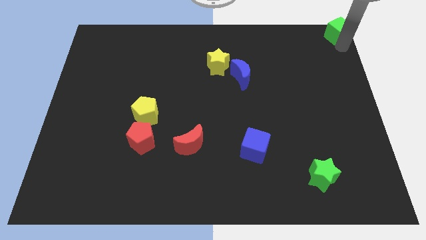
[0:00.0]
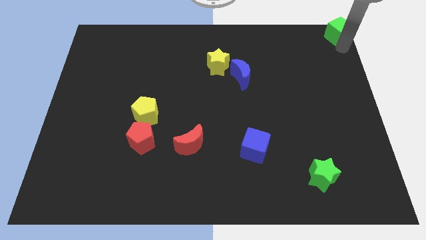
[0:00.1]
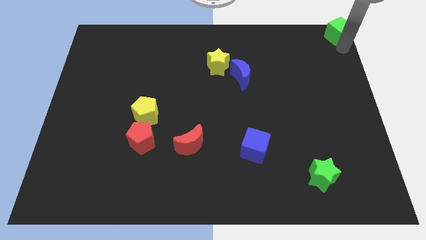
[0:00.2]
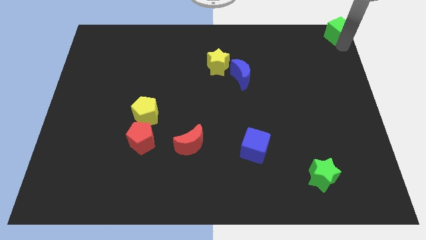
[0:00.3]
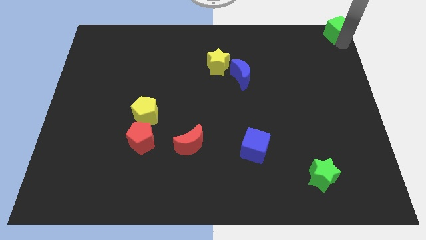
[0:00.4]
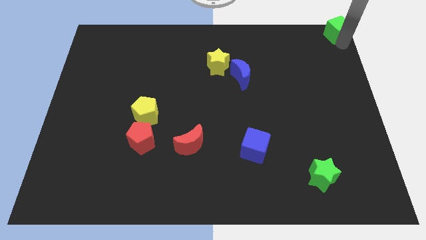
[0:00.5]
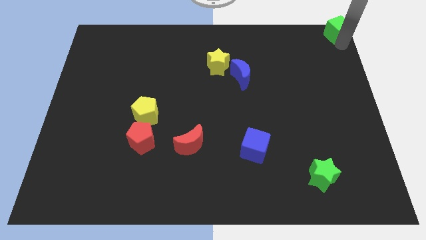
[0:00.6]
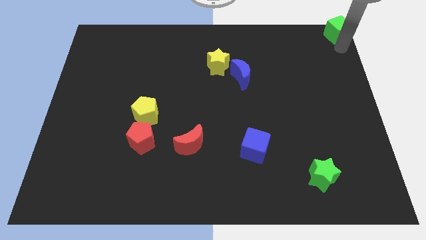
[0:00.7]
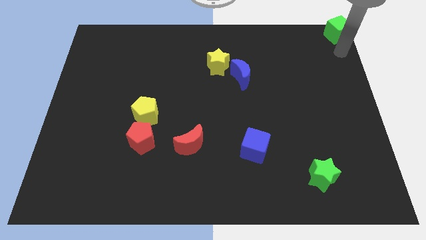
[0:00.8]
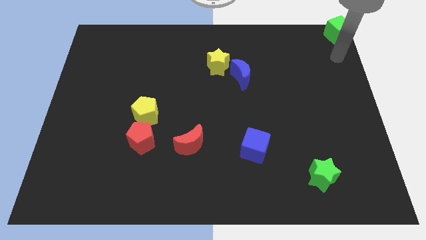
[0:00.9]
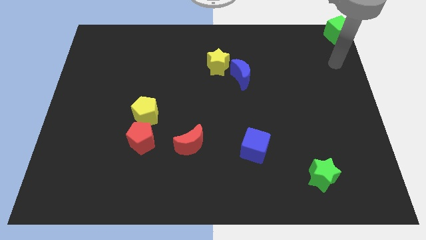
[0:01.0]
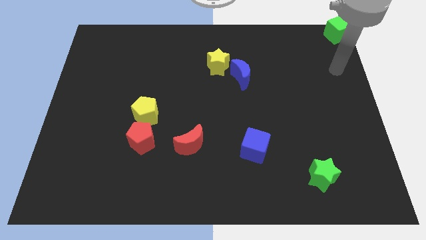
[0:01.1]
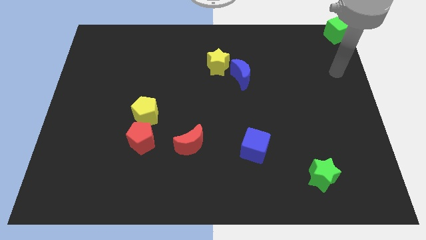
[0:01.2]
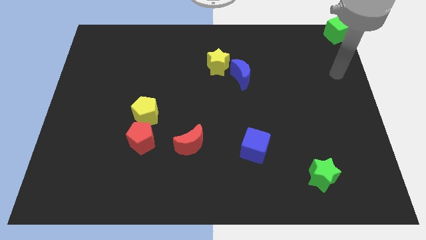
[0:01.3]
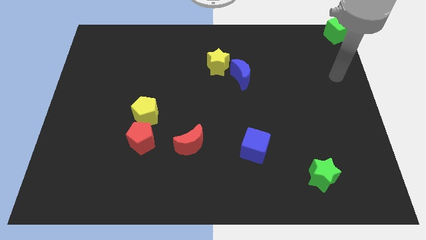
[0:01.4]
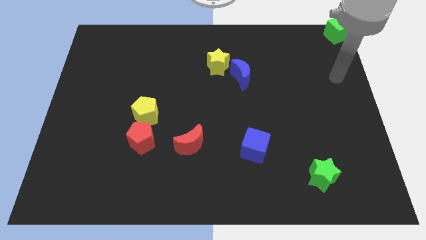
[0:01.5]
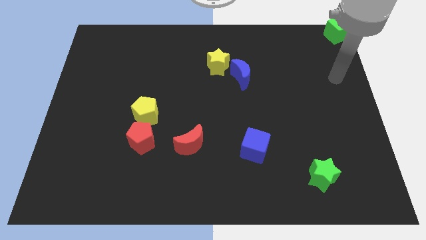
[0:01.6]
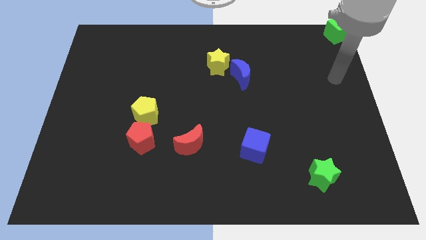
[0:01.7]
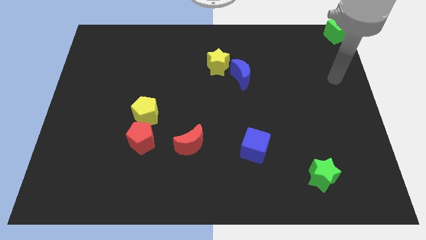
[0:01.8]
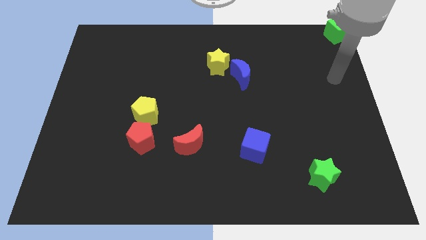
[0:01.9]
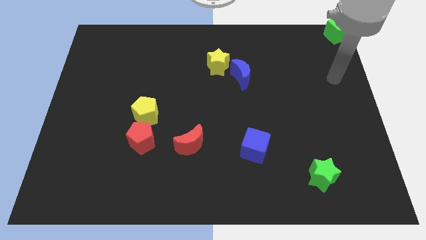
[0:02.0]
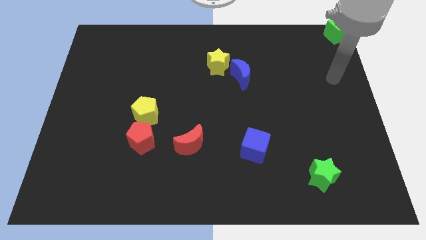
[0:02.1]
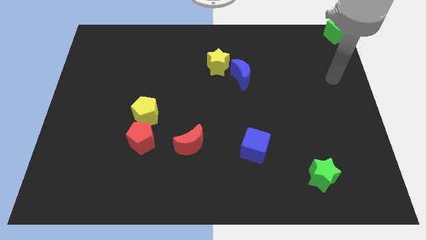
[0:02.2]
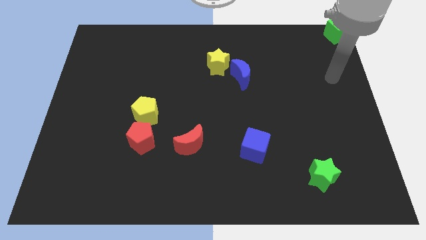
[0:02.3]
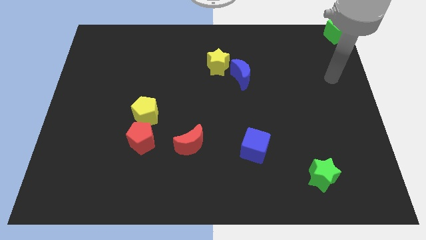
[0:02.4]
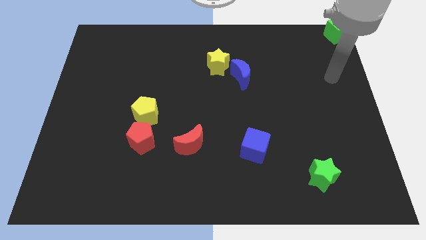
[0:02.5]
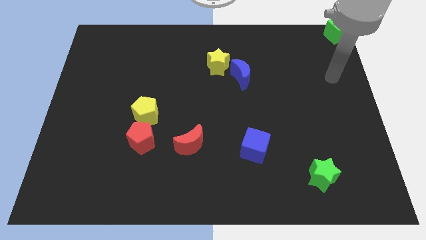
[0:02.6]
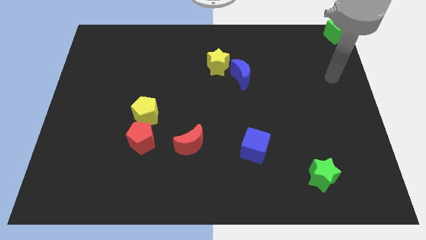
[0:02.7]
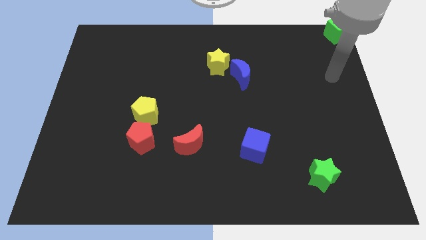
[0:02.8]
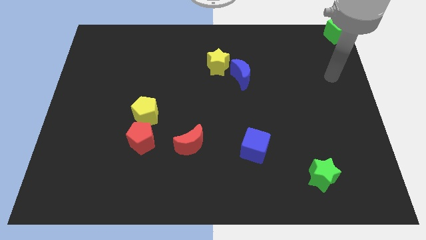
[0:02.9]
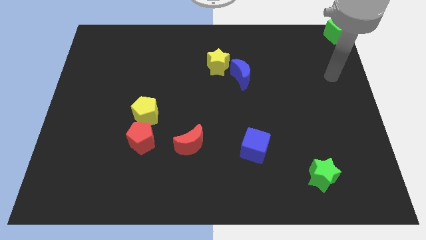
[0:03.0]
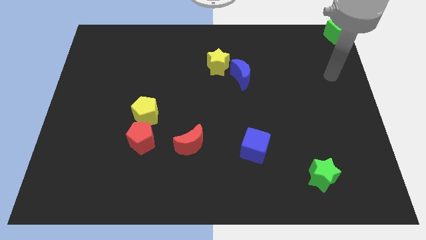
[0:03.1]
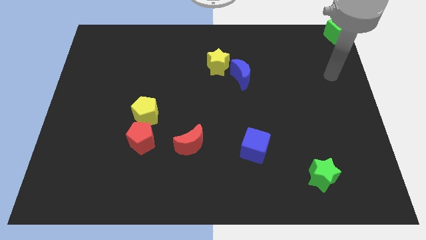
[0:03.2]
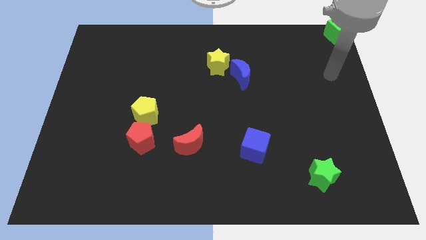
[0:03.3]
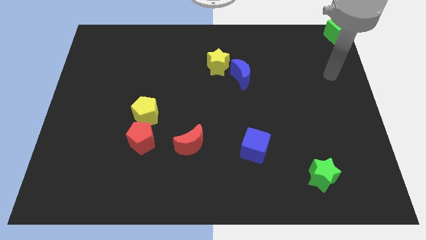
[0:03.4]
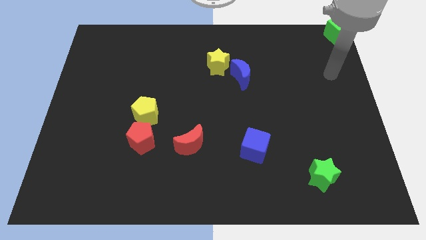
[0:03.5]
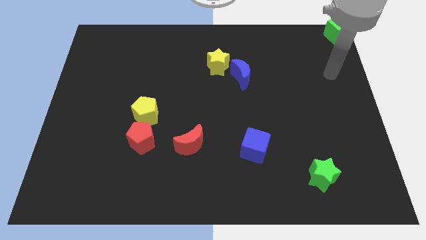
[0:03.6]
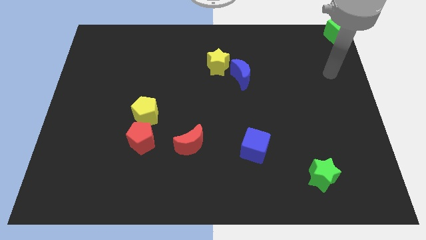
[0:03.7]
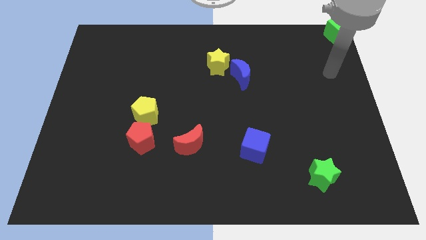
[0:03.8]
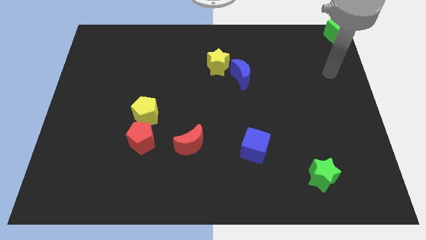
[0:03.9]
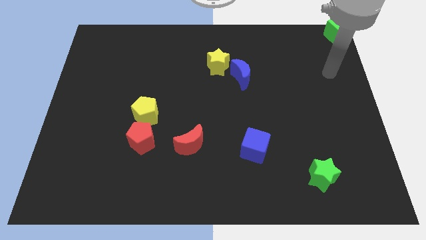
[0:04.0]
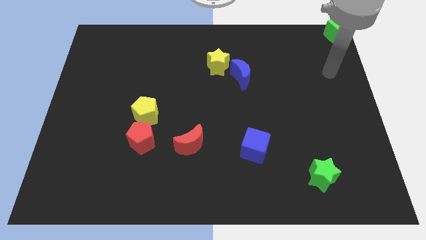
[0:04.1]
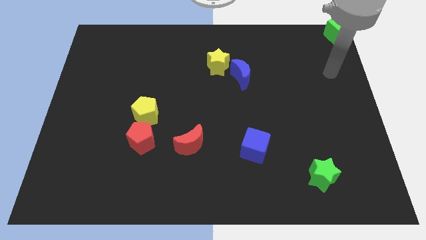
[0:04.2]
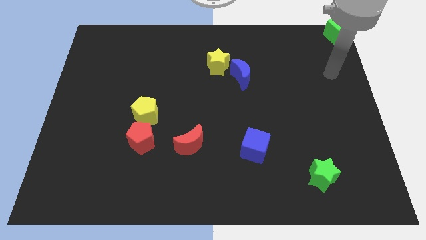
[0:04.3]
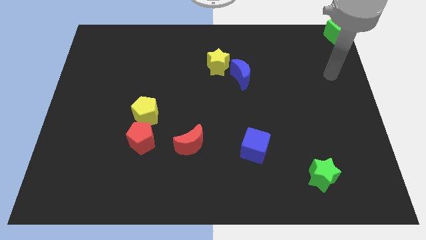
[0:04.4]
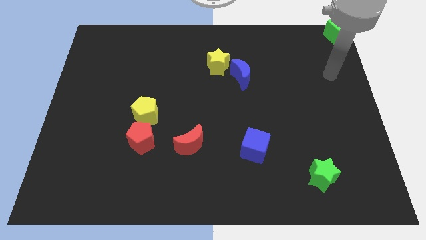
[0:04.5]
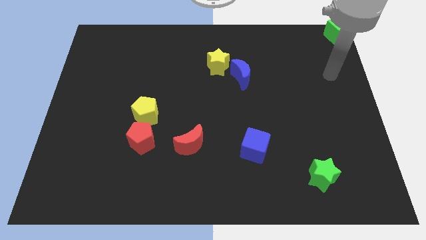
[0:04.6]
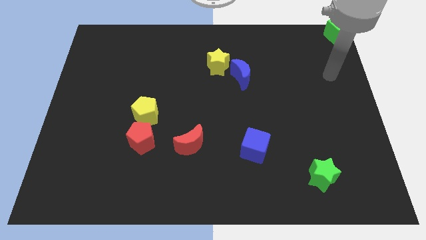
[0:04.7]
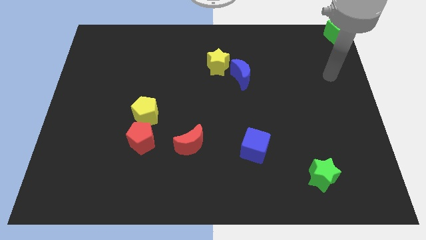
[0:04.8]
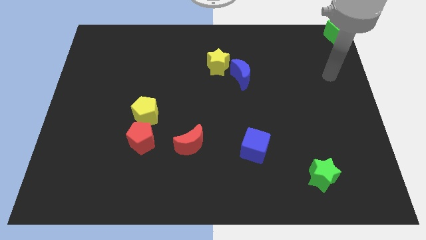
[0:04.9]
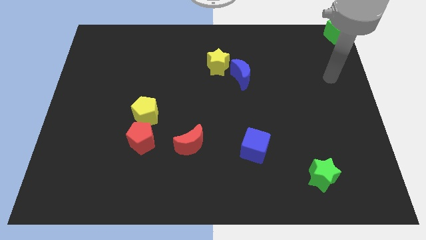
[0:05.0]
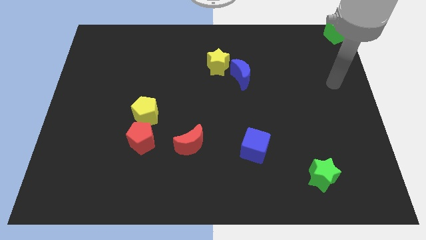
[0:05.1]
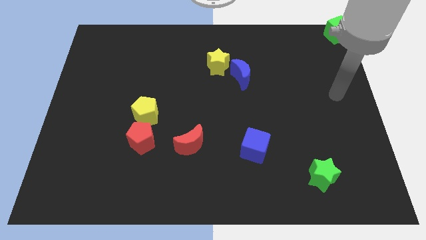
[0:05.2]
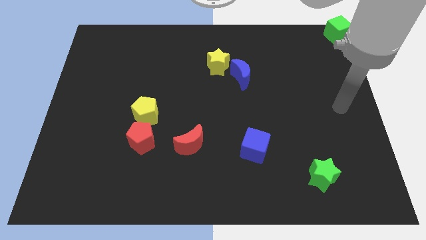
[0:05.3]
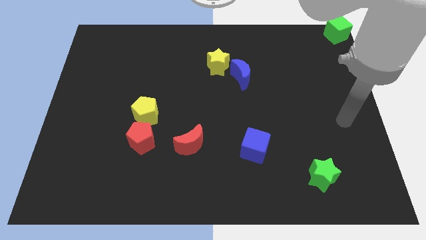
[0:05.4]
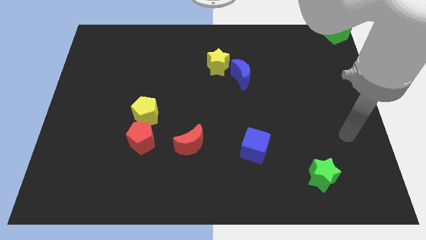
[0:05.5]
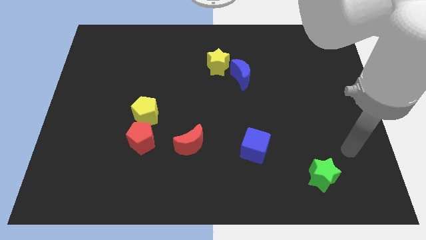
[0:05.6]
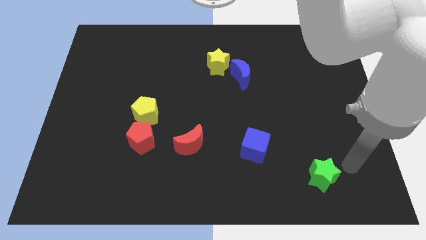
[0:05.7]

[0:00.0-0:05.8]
move your arm to the right of the green star

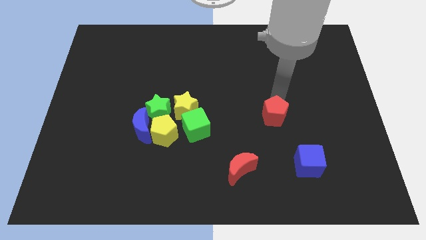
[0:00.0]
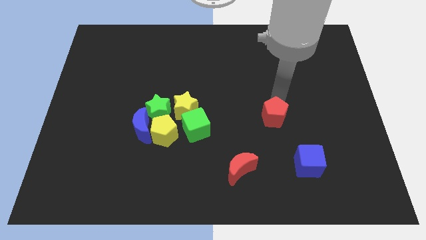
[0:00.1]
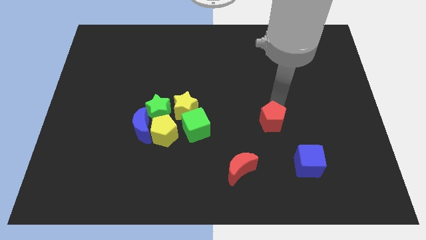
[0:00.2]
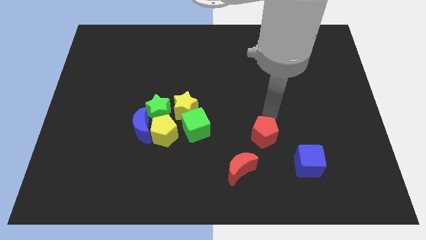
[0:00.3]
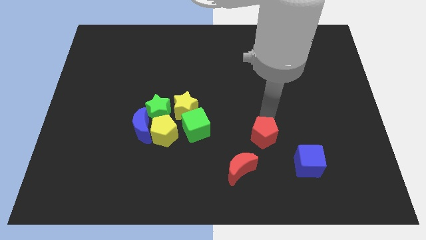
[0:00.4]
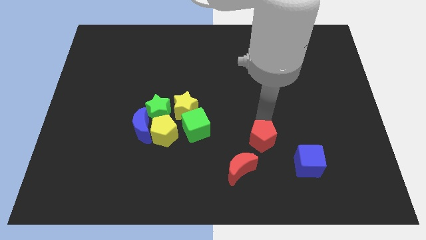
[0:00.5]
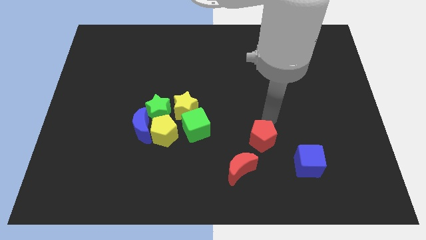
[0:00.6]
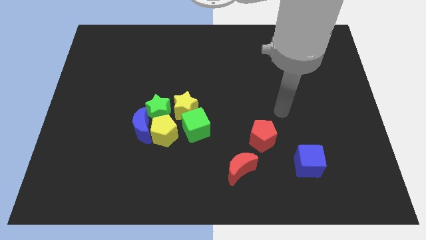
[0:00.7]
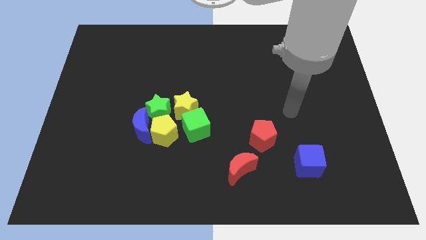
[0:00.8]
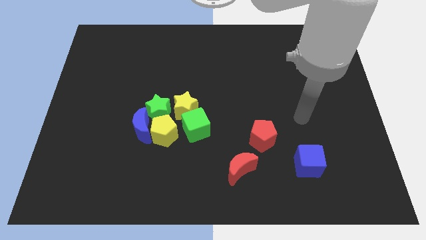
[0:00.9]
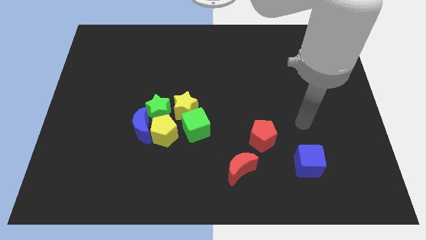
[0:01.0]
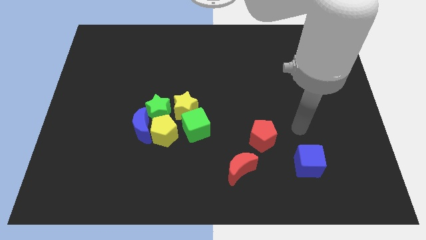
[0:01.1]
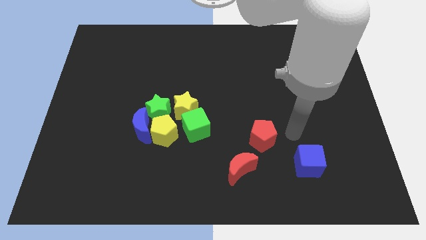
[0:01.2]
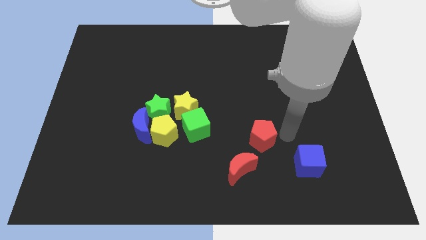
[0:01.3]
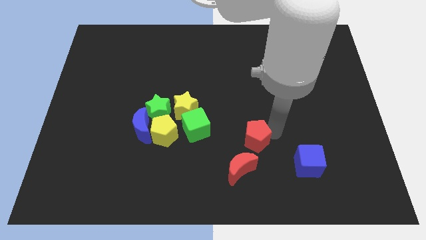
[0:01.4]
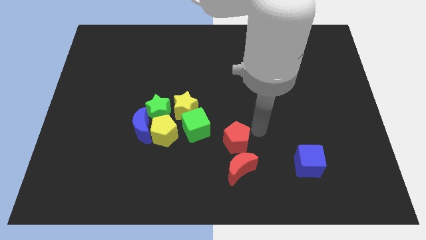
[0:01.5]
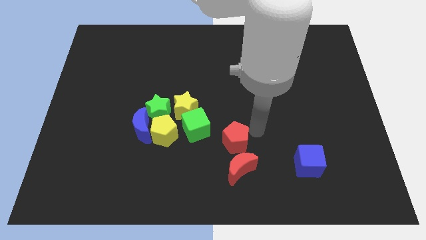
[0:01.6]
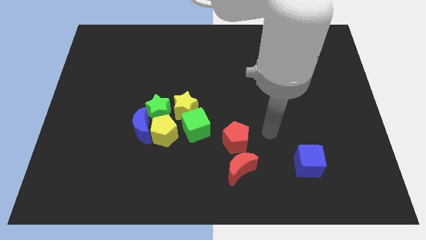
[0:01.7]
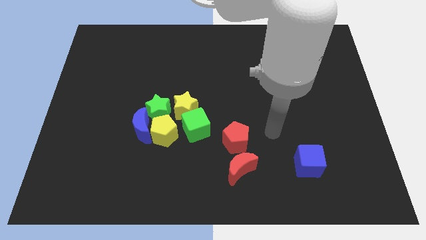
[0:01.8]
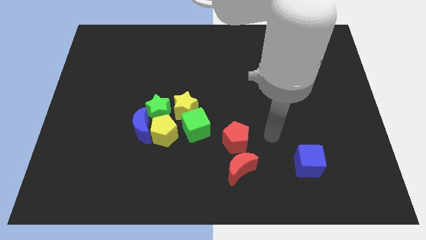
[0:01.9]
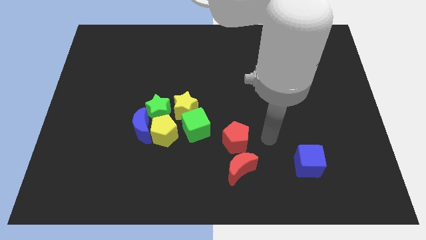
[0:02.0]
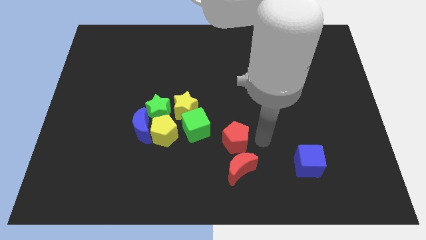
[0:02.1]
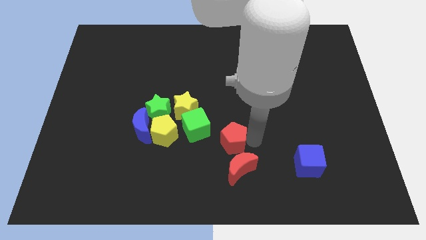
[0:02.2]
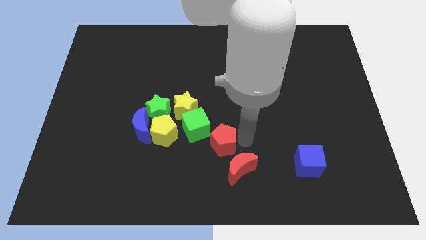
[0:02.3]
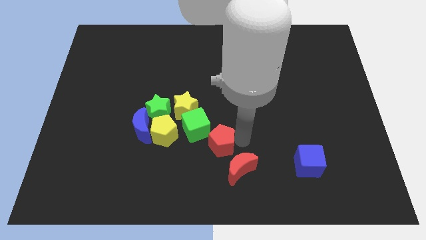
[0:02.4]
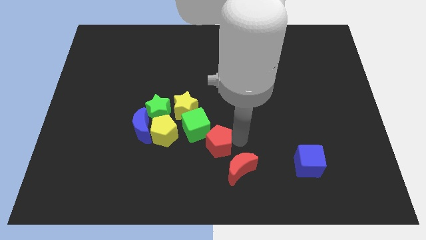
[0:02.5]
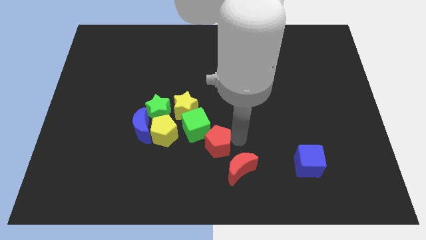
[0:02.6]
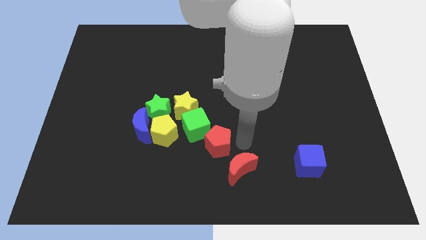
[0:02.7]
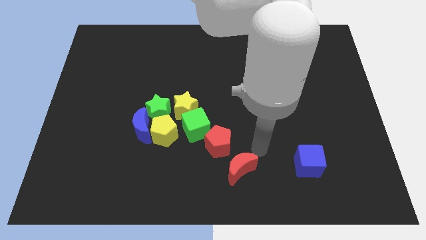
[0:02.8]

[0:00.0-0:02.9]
push the red pentagon into the green cube

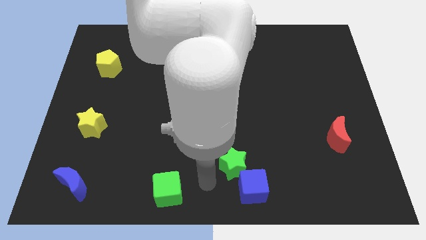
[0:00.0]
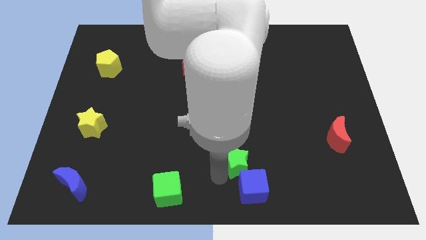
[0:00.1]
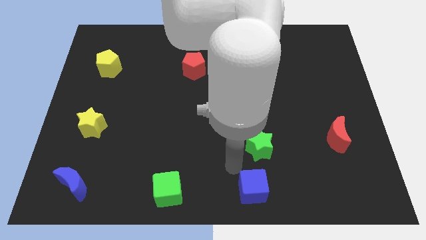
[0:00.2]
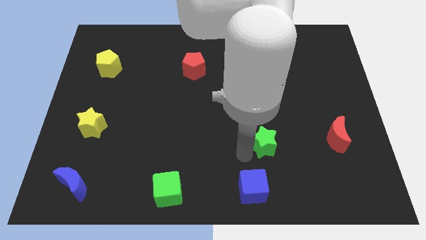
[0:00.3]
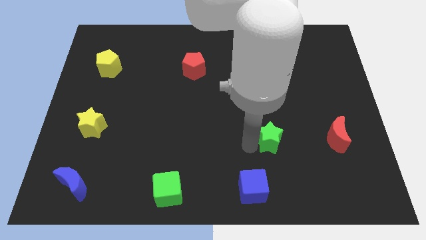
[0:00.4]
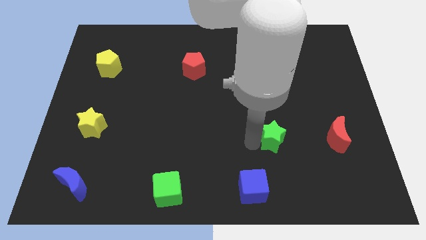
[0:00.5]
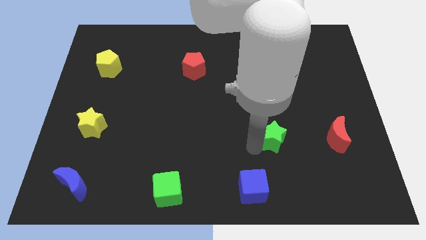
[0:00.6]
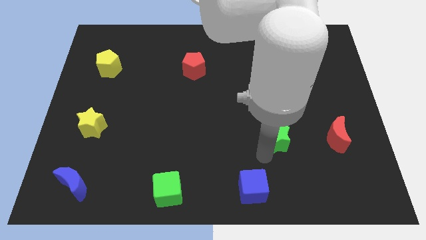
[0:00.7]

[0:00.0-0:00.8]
place the green star to the left of the red crescent
